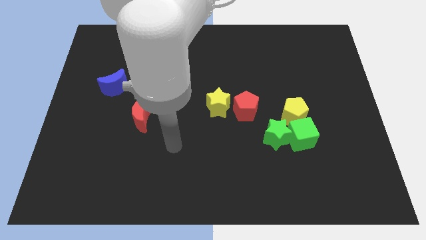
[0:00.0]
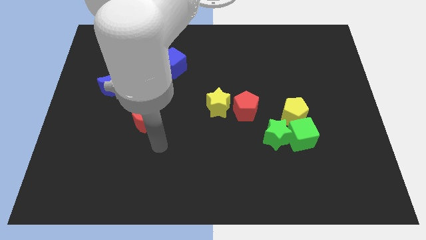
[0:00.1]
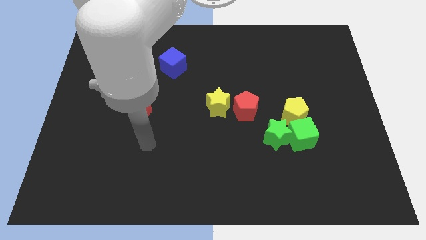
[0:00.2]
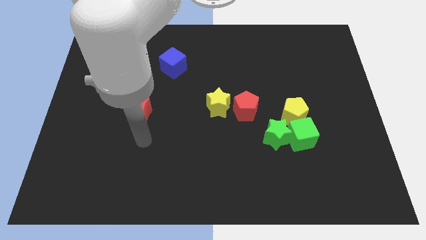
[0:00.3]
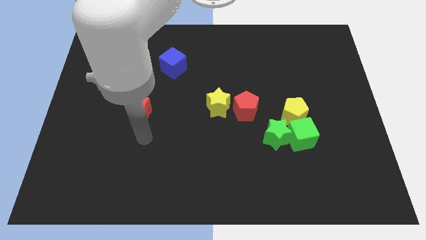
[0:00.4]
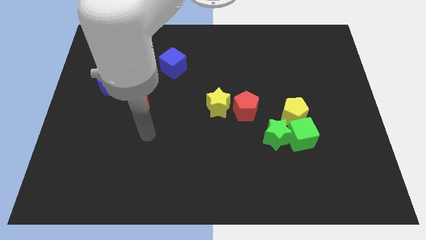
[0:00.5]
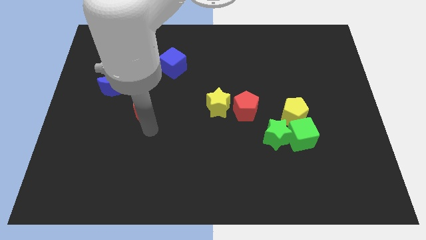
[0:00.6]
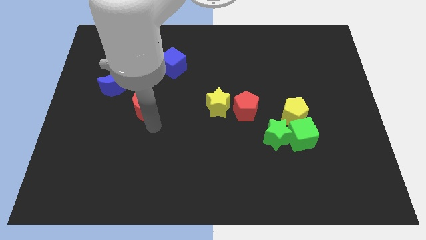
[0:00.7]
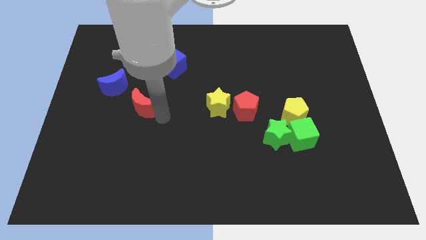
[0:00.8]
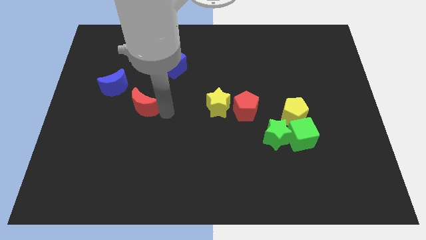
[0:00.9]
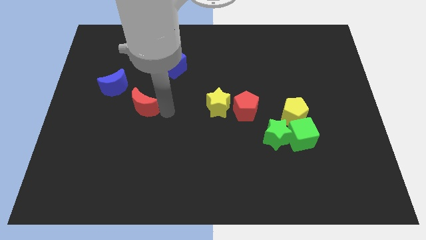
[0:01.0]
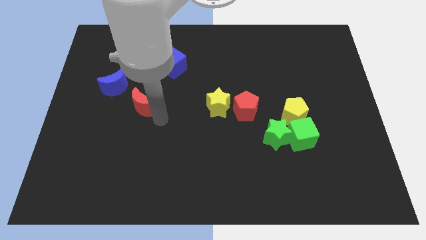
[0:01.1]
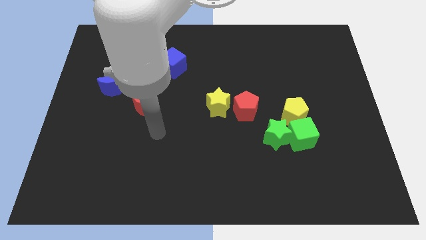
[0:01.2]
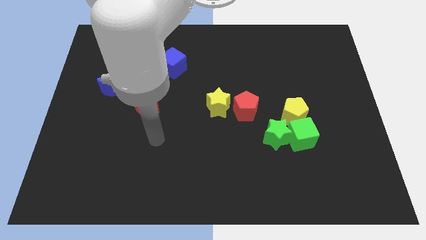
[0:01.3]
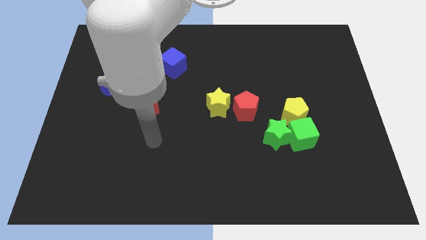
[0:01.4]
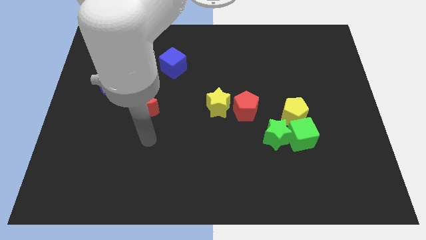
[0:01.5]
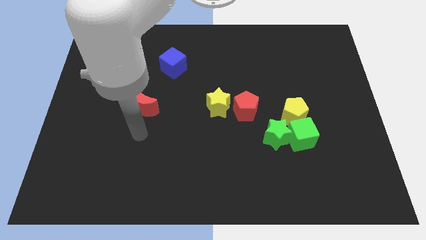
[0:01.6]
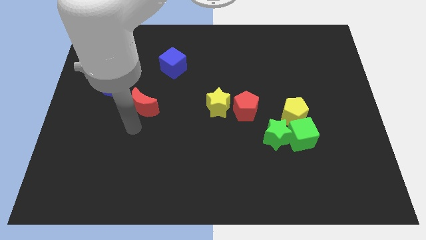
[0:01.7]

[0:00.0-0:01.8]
move the red moon slightly upwards

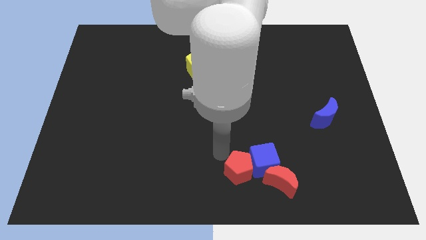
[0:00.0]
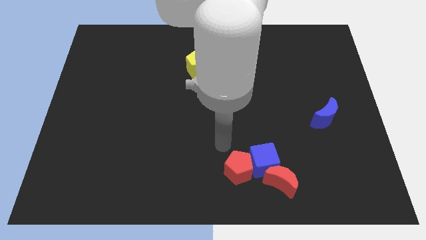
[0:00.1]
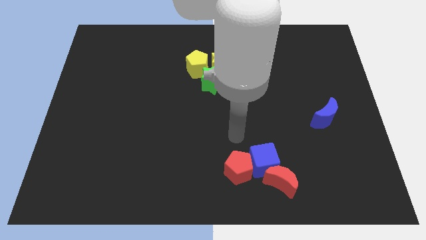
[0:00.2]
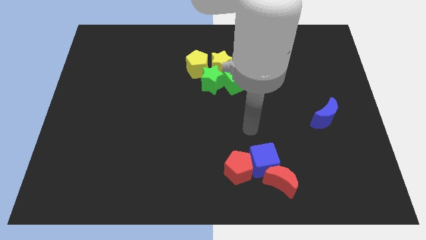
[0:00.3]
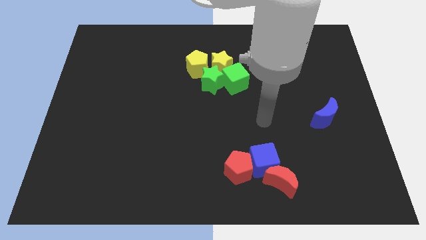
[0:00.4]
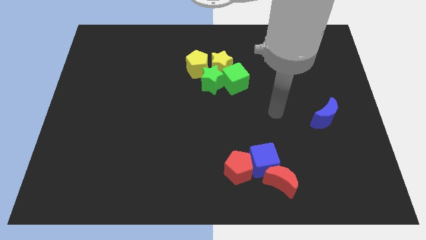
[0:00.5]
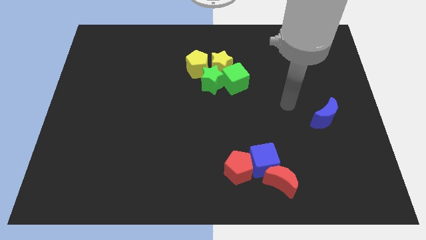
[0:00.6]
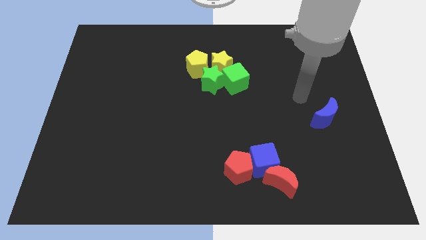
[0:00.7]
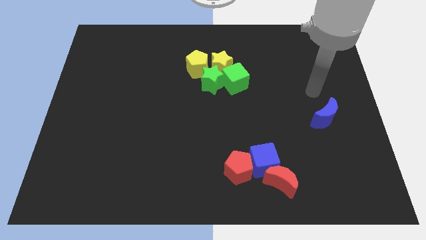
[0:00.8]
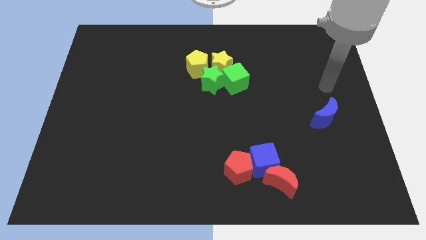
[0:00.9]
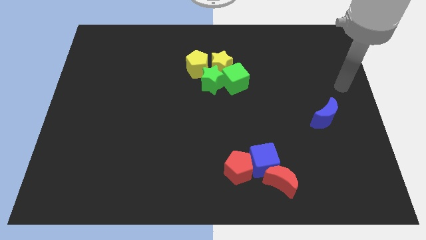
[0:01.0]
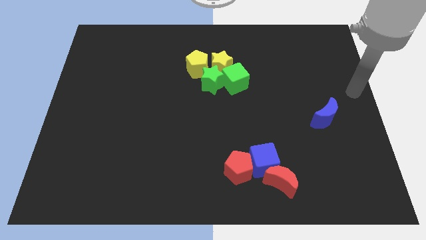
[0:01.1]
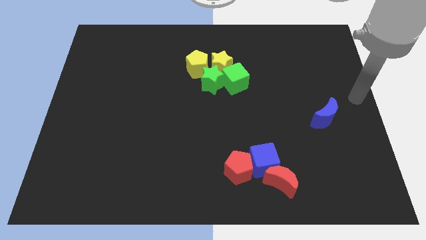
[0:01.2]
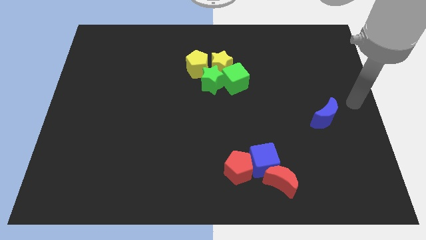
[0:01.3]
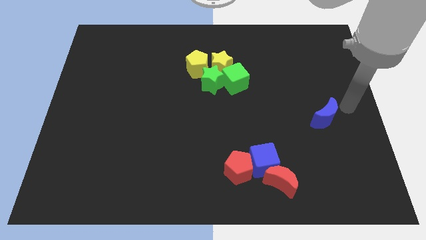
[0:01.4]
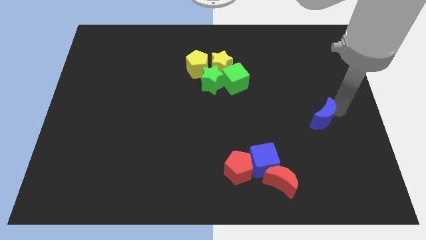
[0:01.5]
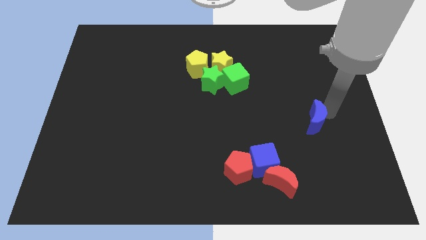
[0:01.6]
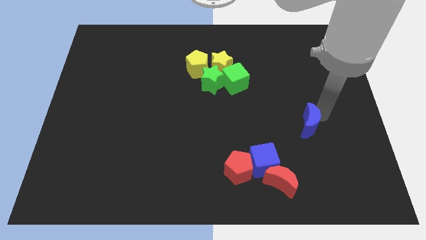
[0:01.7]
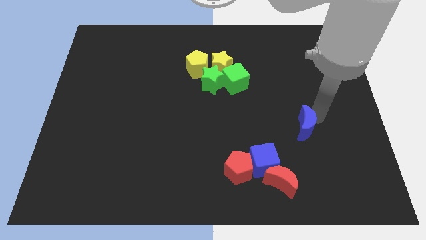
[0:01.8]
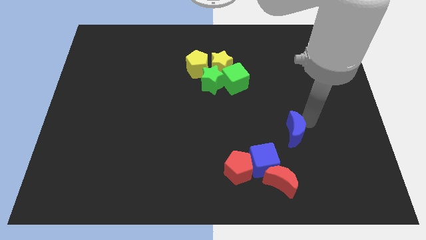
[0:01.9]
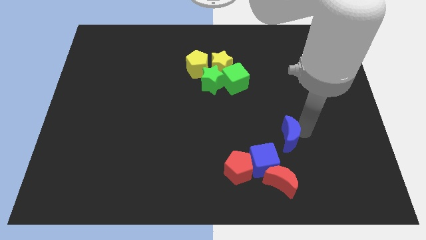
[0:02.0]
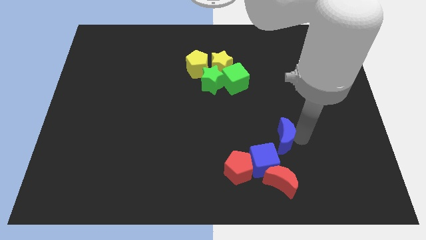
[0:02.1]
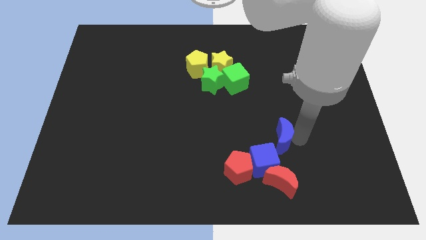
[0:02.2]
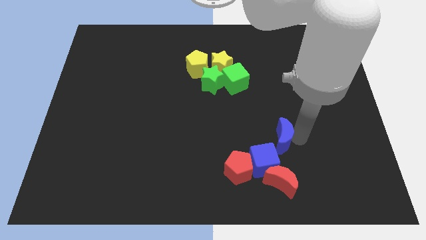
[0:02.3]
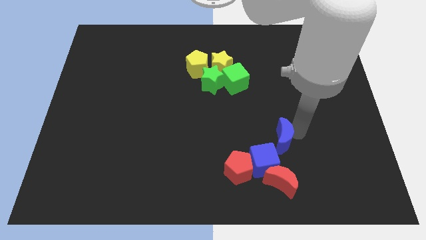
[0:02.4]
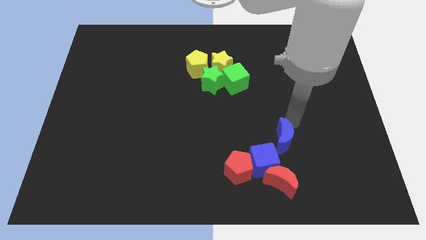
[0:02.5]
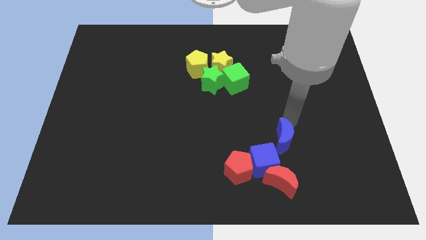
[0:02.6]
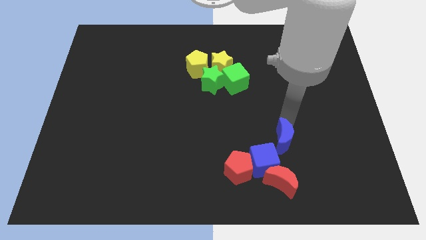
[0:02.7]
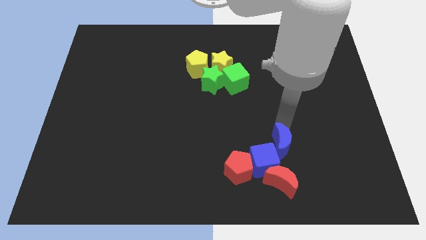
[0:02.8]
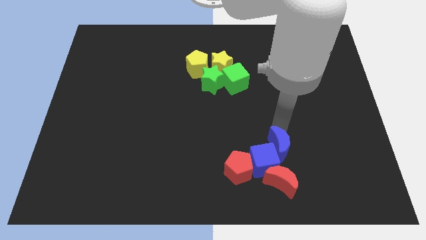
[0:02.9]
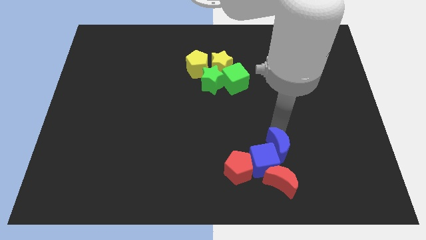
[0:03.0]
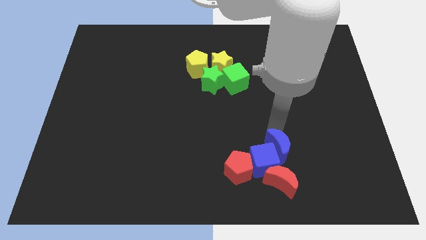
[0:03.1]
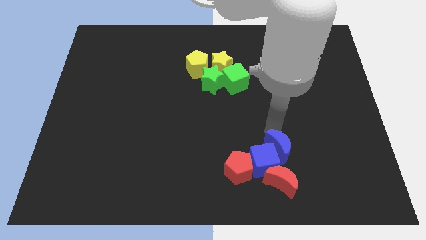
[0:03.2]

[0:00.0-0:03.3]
push the blue moon towards the blue cube

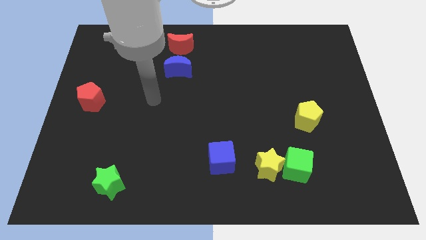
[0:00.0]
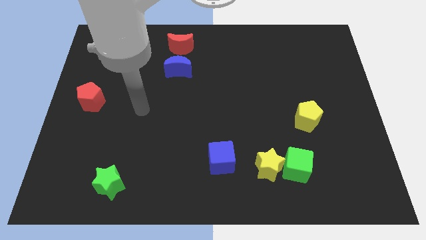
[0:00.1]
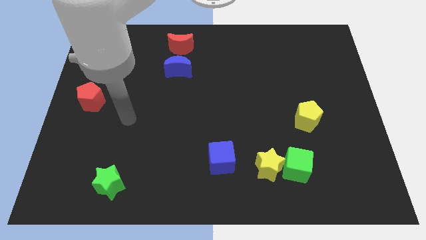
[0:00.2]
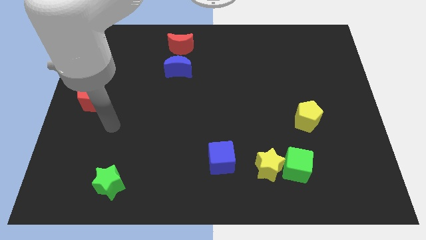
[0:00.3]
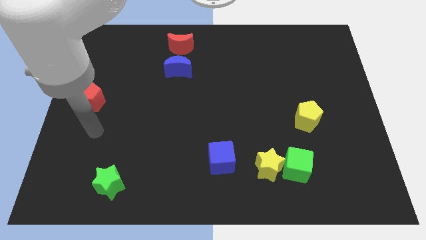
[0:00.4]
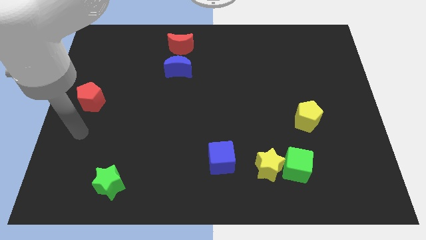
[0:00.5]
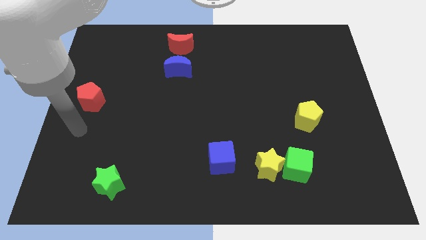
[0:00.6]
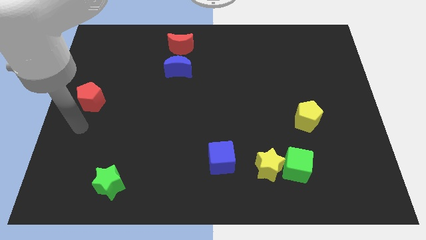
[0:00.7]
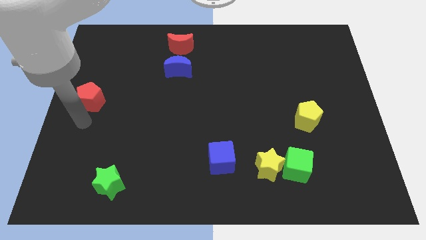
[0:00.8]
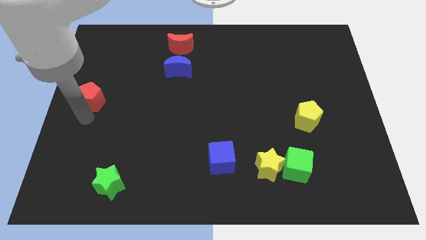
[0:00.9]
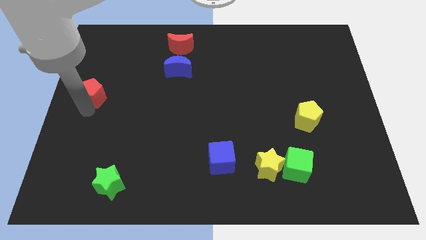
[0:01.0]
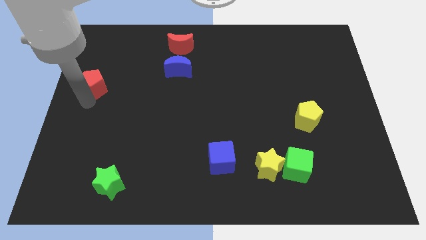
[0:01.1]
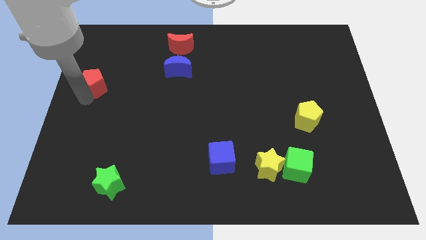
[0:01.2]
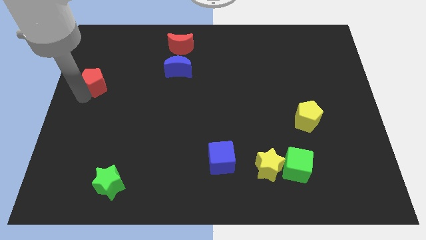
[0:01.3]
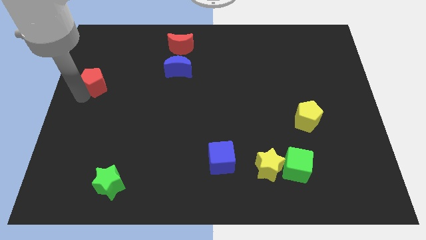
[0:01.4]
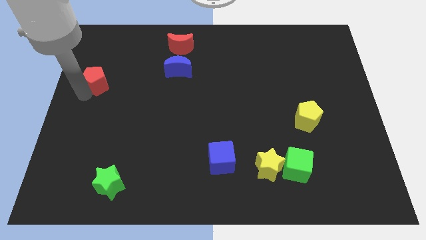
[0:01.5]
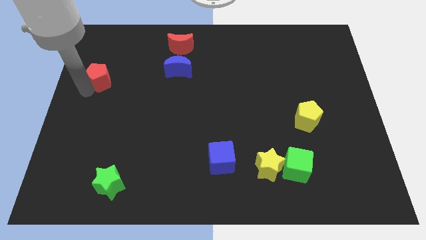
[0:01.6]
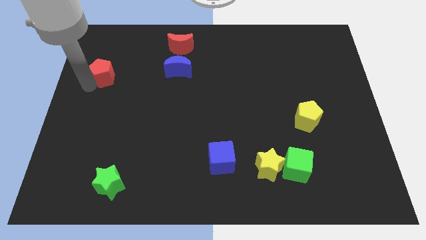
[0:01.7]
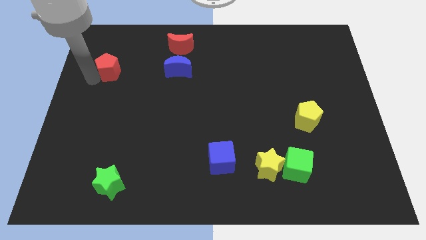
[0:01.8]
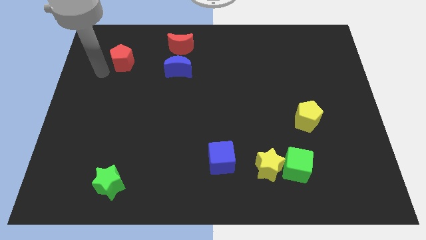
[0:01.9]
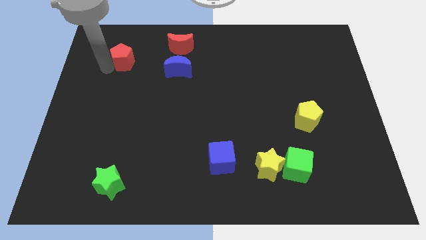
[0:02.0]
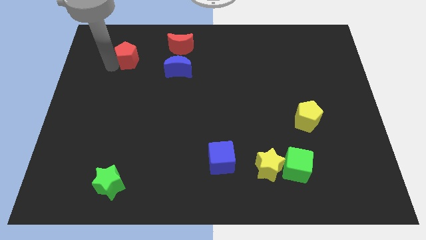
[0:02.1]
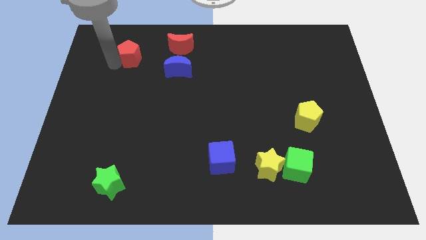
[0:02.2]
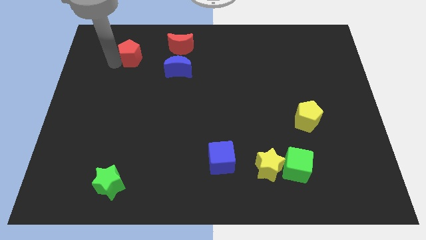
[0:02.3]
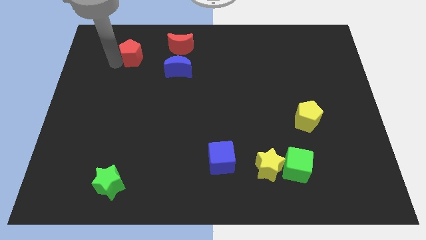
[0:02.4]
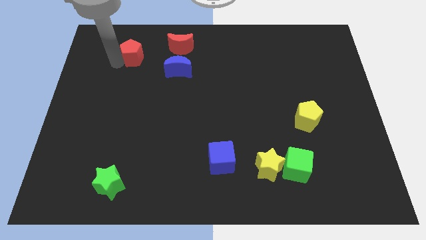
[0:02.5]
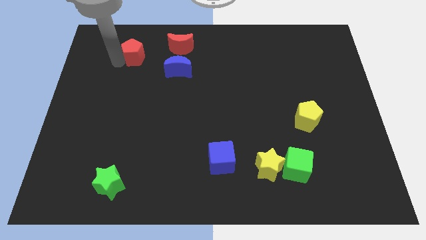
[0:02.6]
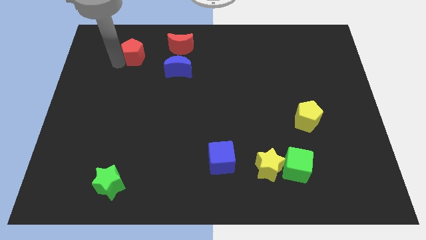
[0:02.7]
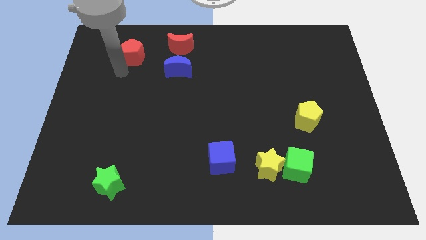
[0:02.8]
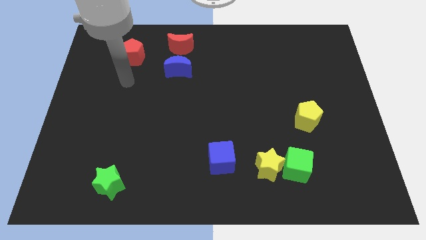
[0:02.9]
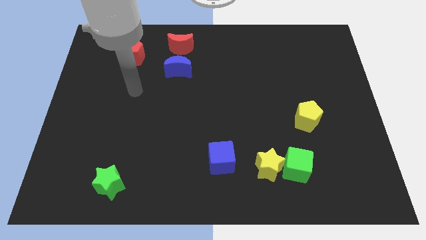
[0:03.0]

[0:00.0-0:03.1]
move the red pentagon to form a triangle with red moon and blue moon

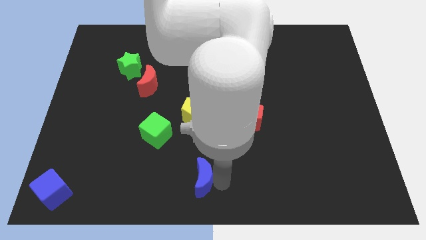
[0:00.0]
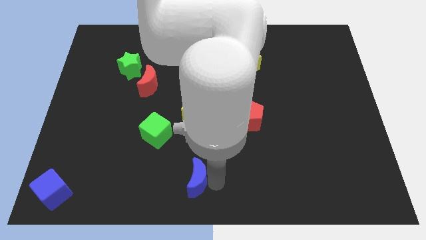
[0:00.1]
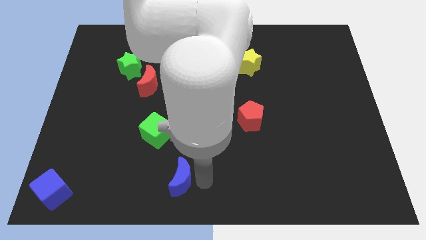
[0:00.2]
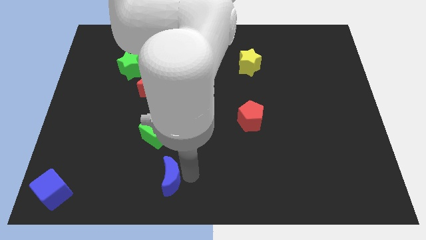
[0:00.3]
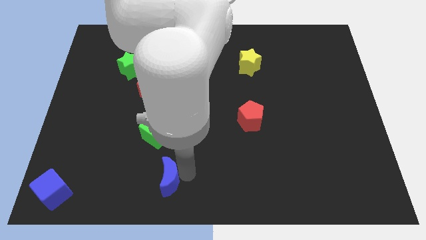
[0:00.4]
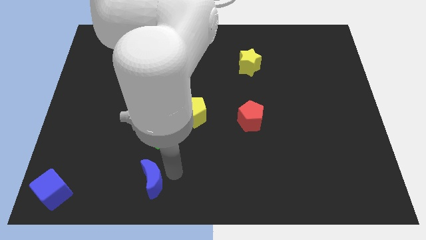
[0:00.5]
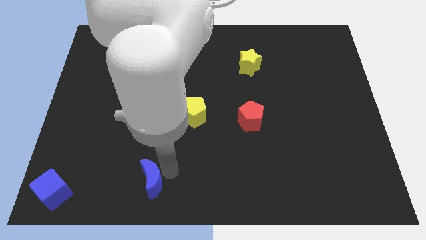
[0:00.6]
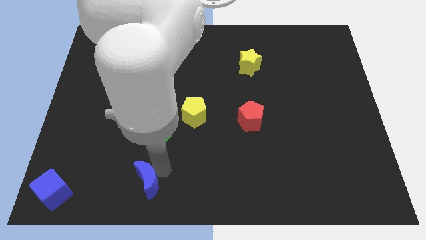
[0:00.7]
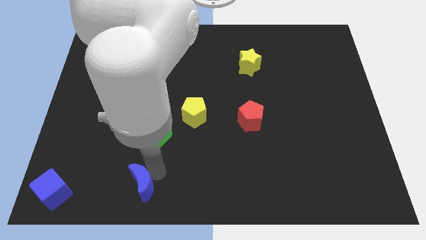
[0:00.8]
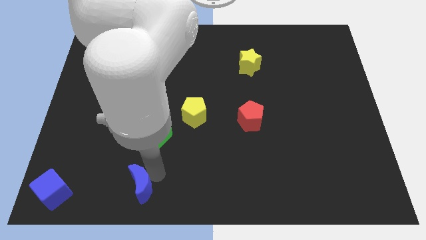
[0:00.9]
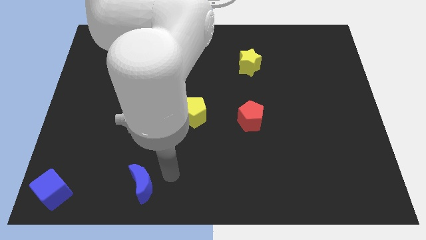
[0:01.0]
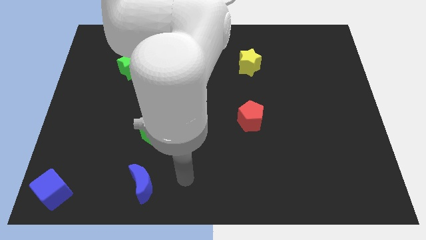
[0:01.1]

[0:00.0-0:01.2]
push the blue moon slightly towards the left side of the board
